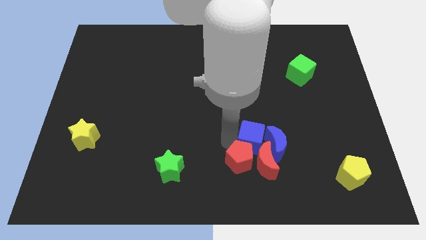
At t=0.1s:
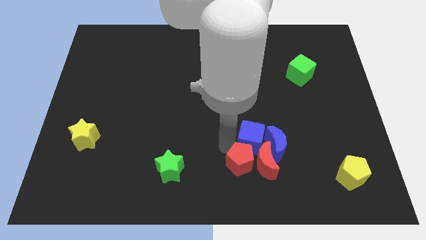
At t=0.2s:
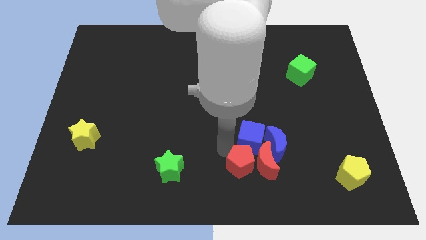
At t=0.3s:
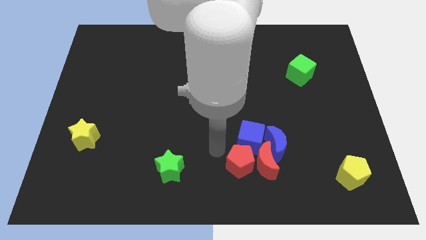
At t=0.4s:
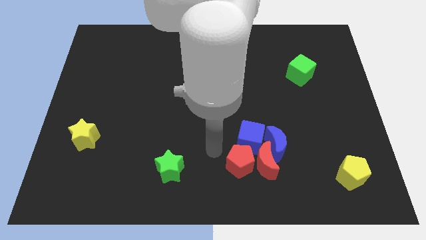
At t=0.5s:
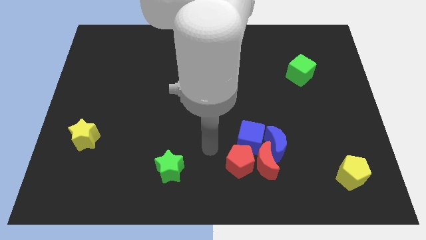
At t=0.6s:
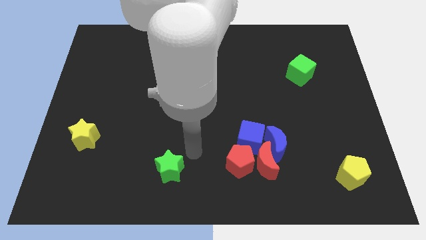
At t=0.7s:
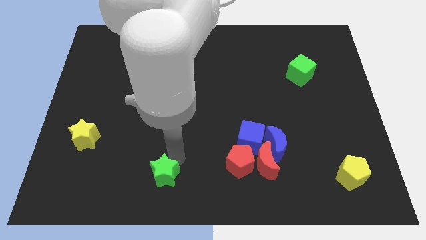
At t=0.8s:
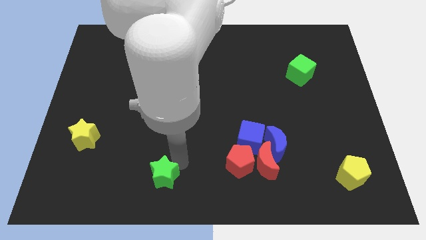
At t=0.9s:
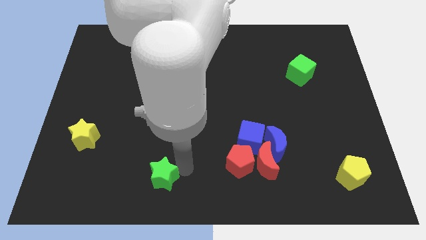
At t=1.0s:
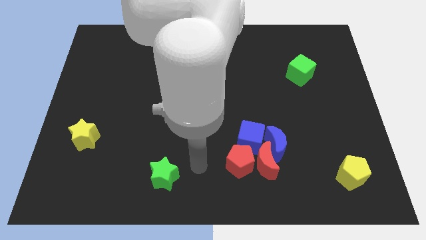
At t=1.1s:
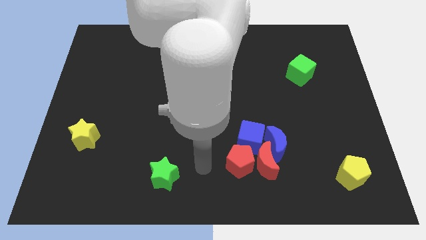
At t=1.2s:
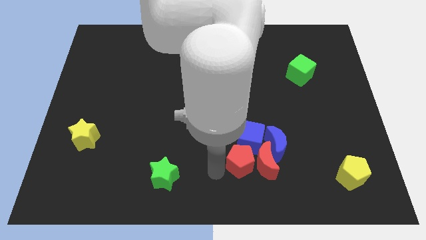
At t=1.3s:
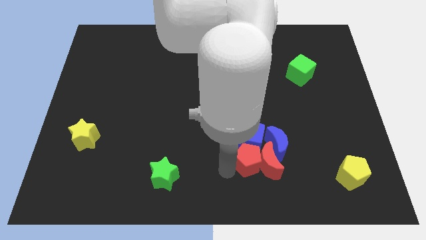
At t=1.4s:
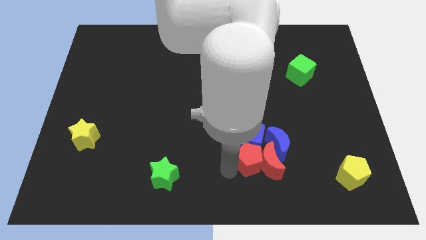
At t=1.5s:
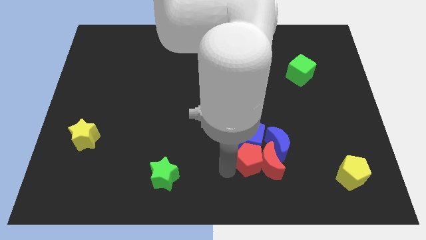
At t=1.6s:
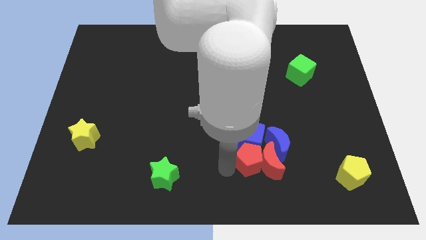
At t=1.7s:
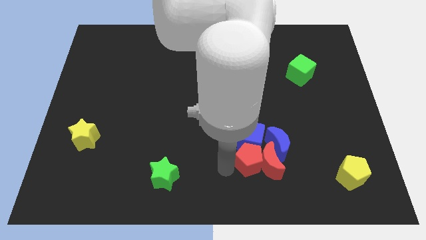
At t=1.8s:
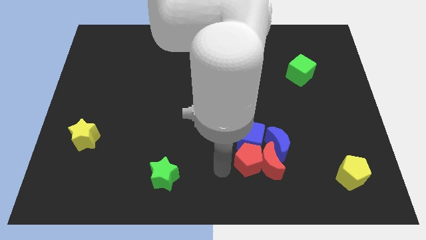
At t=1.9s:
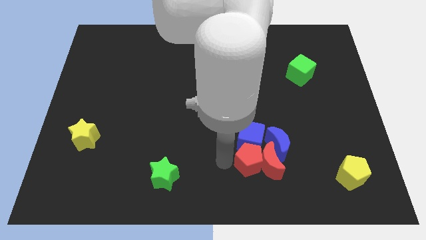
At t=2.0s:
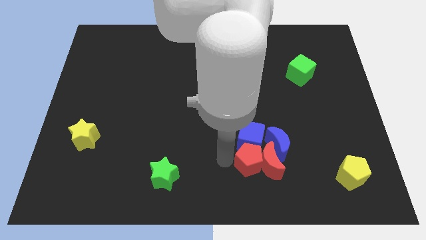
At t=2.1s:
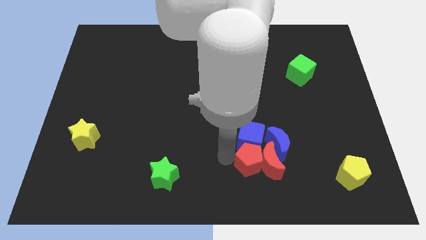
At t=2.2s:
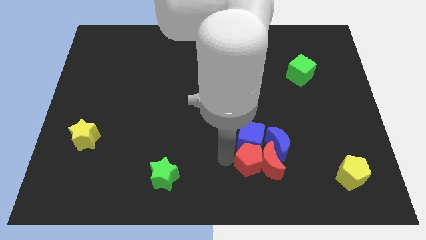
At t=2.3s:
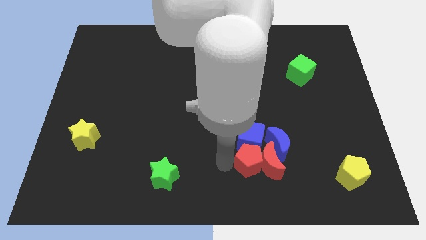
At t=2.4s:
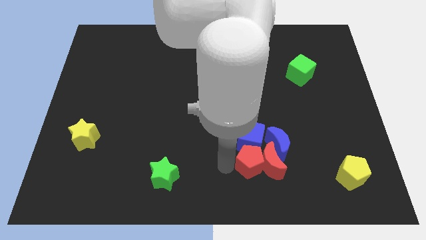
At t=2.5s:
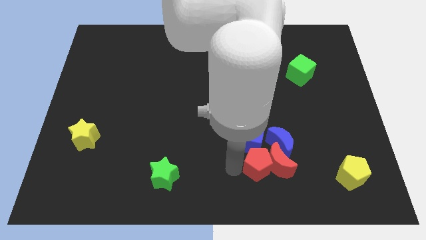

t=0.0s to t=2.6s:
touch the green star and yellow pentagon

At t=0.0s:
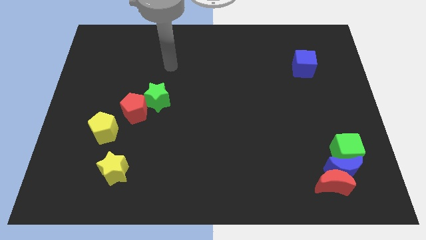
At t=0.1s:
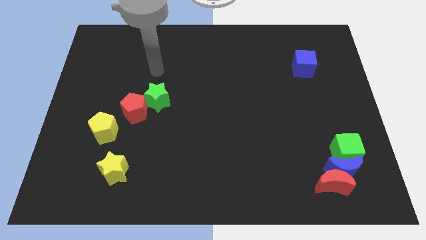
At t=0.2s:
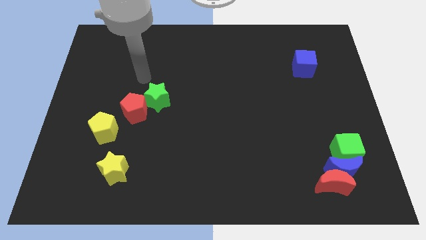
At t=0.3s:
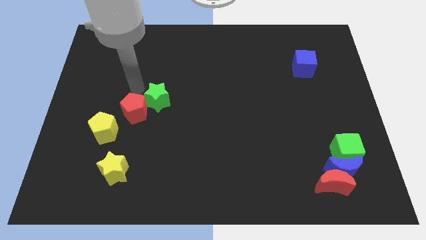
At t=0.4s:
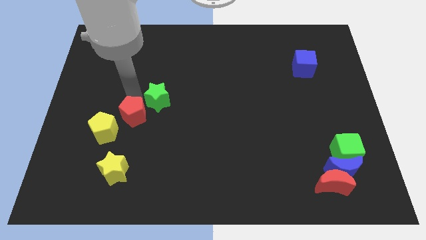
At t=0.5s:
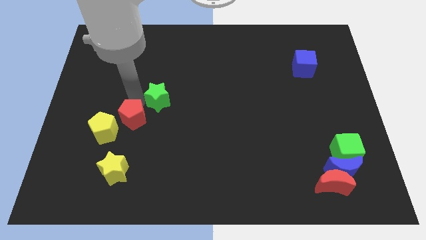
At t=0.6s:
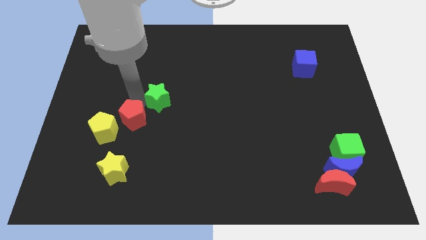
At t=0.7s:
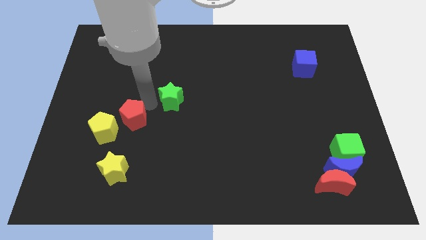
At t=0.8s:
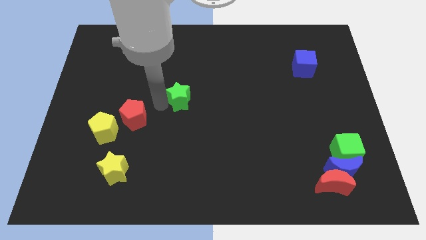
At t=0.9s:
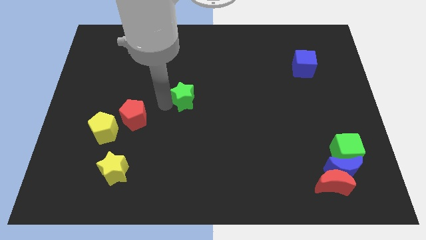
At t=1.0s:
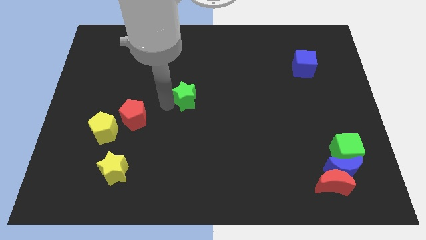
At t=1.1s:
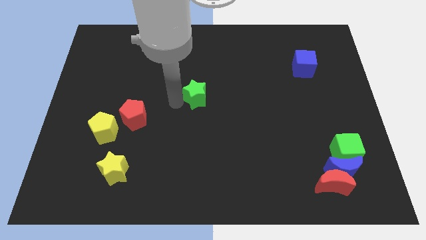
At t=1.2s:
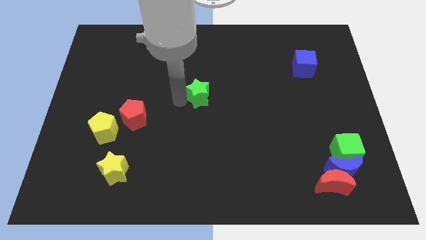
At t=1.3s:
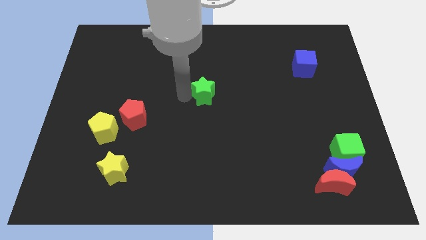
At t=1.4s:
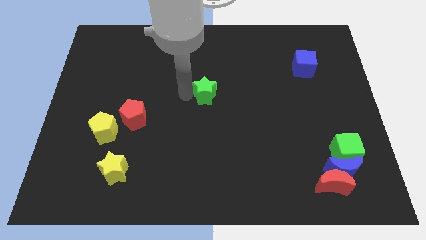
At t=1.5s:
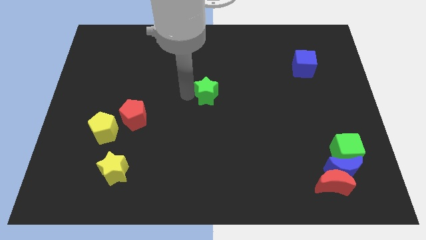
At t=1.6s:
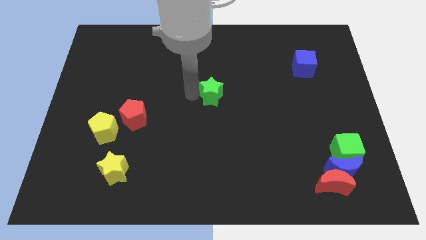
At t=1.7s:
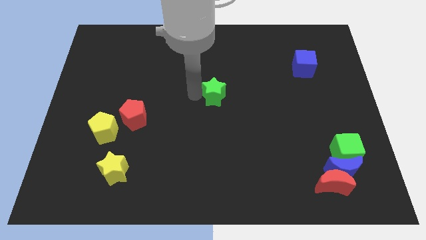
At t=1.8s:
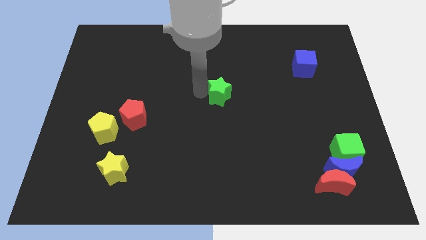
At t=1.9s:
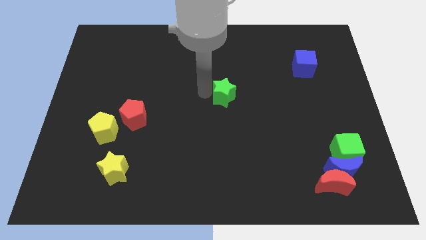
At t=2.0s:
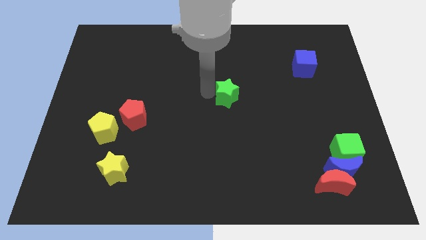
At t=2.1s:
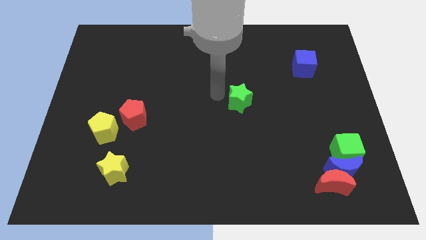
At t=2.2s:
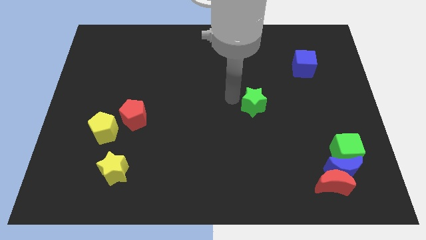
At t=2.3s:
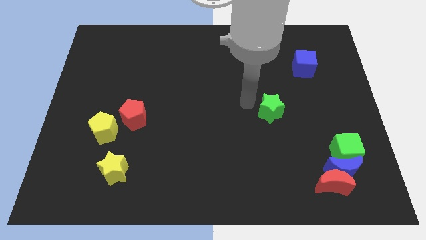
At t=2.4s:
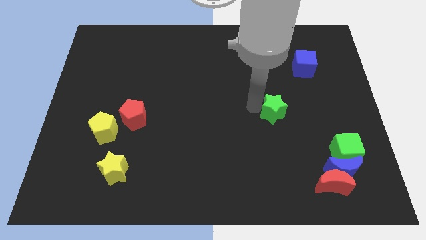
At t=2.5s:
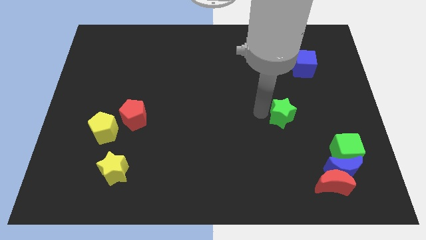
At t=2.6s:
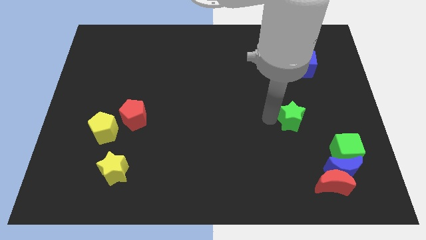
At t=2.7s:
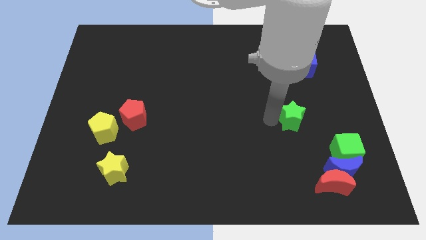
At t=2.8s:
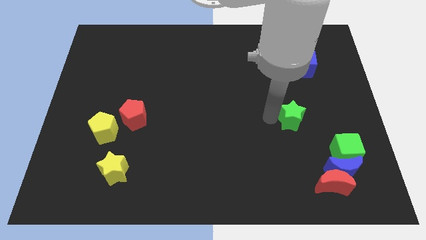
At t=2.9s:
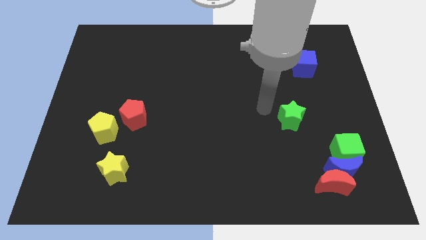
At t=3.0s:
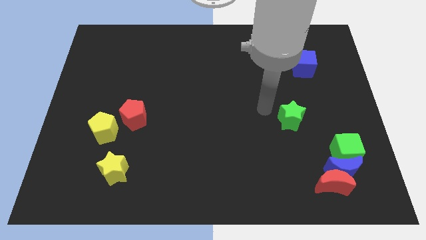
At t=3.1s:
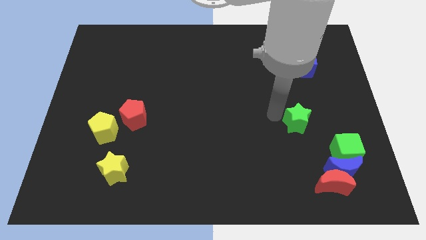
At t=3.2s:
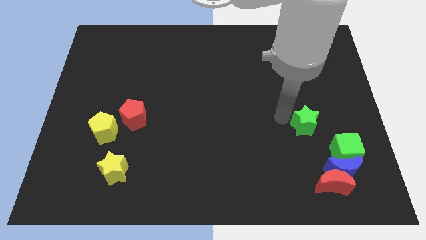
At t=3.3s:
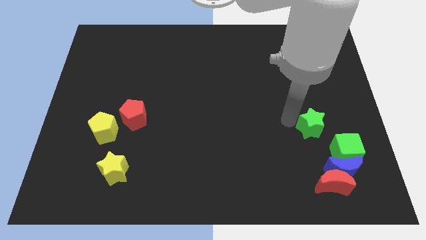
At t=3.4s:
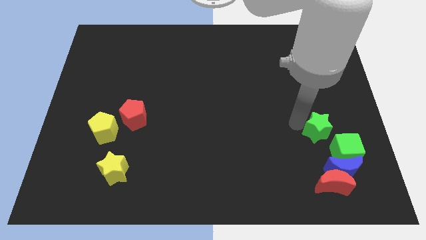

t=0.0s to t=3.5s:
move the green star towards the green cube

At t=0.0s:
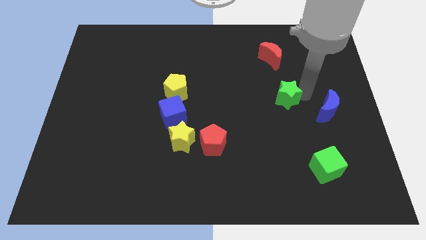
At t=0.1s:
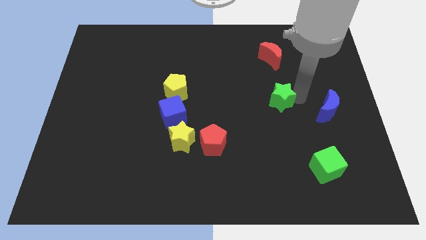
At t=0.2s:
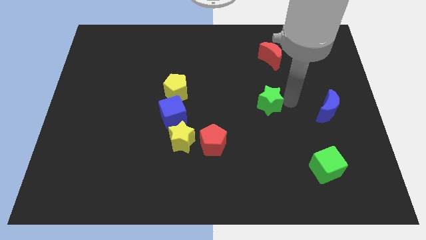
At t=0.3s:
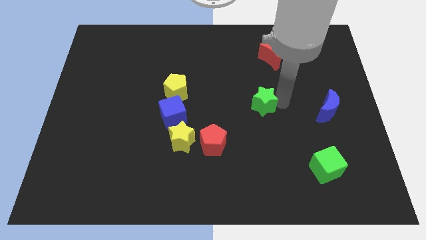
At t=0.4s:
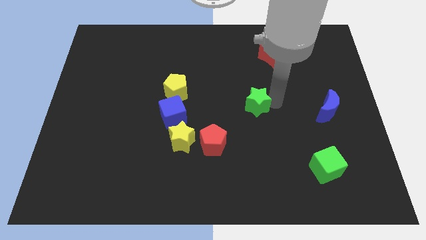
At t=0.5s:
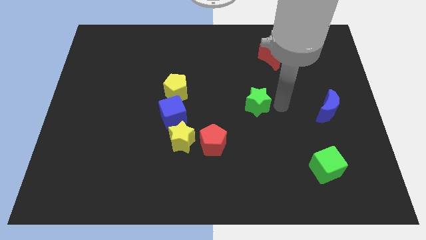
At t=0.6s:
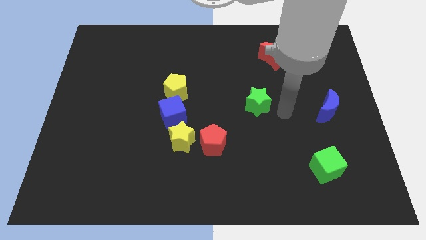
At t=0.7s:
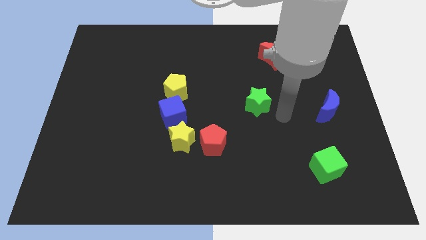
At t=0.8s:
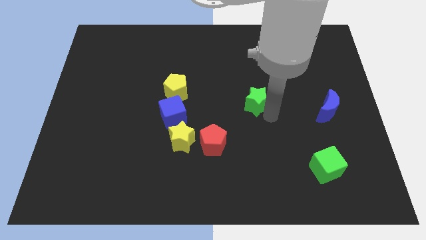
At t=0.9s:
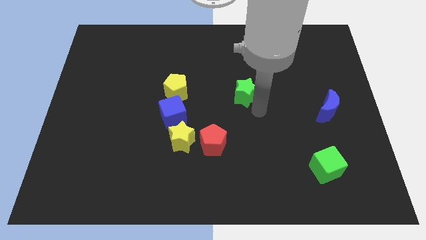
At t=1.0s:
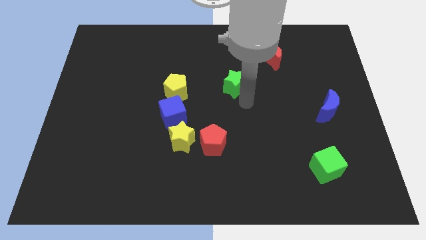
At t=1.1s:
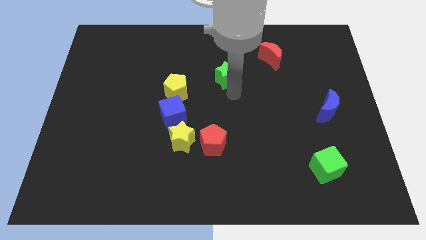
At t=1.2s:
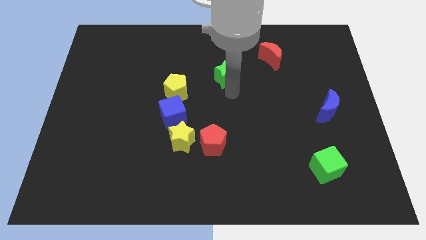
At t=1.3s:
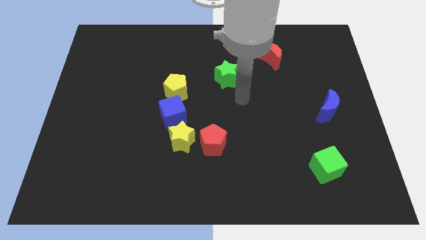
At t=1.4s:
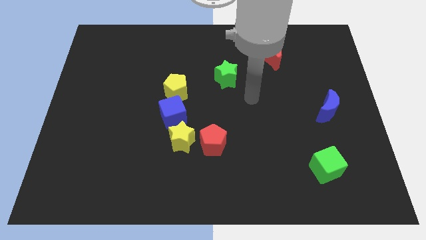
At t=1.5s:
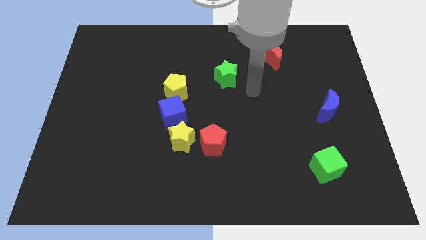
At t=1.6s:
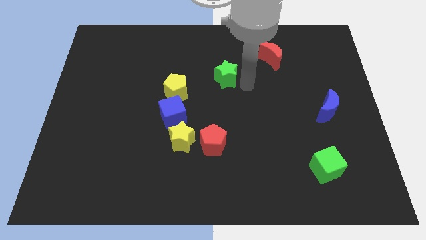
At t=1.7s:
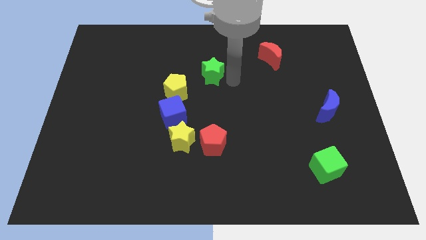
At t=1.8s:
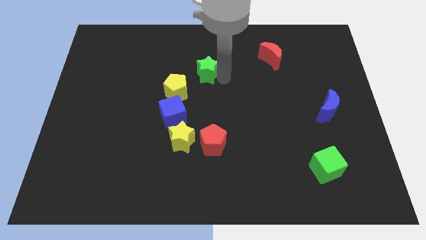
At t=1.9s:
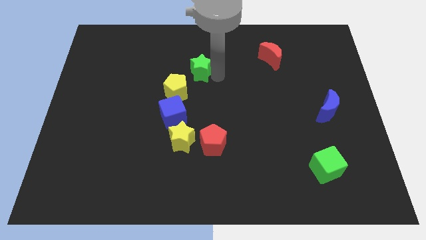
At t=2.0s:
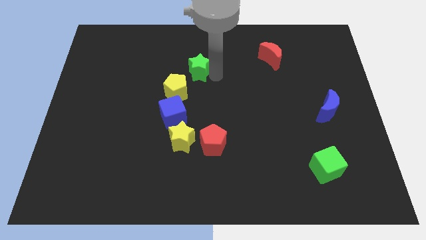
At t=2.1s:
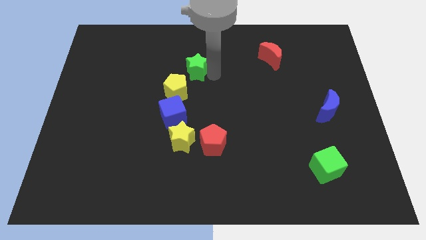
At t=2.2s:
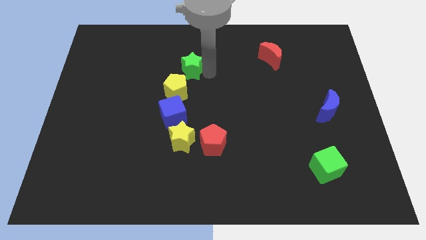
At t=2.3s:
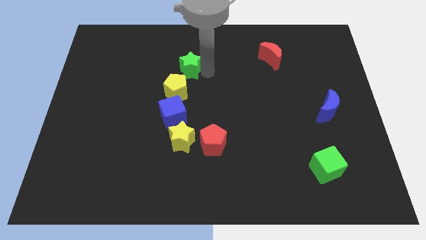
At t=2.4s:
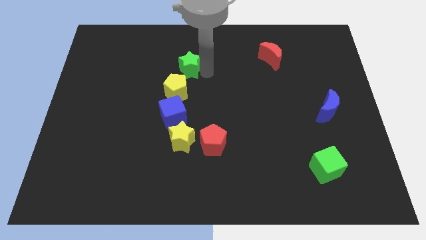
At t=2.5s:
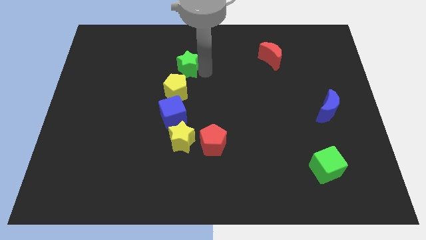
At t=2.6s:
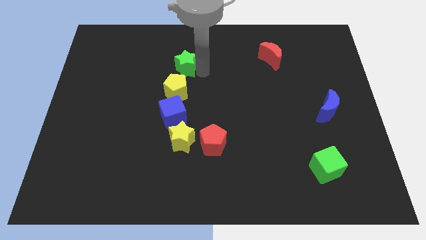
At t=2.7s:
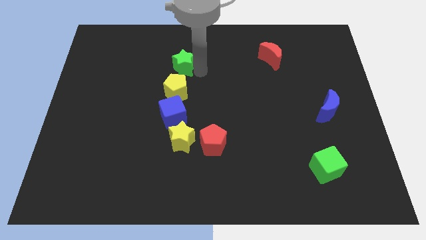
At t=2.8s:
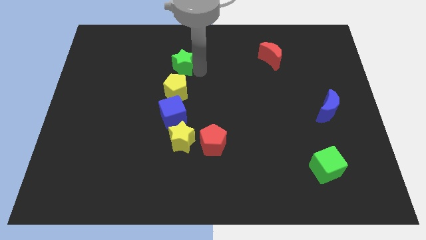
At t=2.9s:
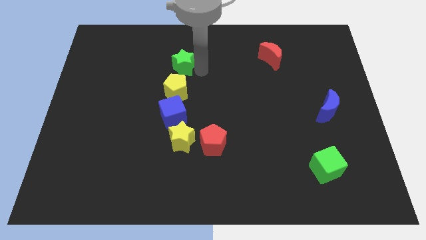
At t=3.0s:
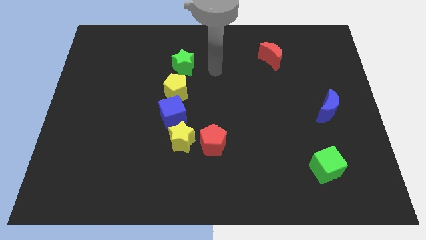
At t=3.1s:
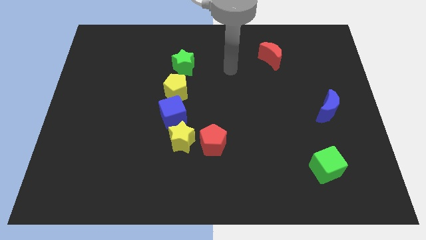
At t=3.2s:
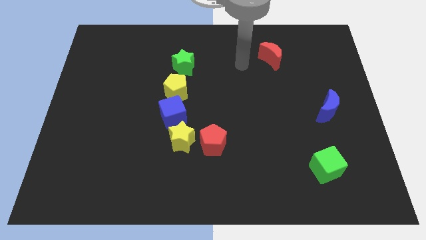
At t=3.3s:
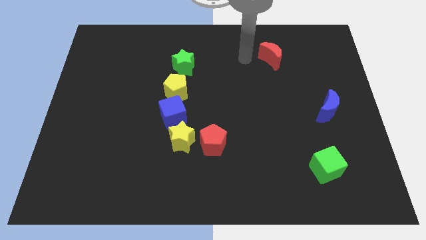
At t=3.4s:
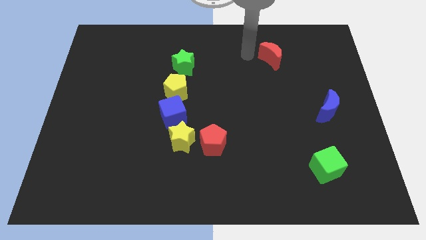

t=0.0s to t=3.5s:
push the green star above the yellow pentagon
